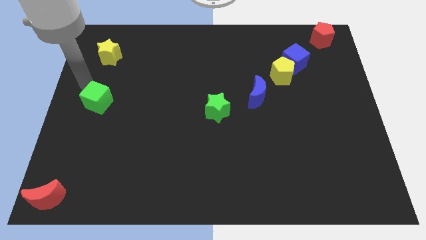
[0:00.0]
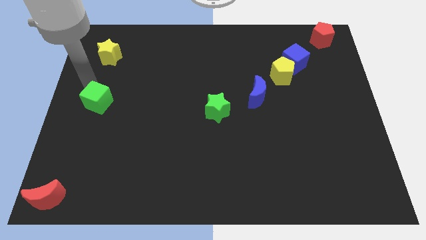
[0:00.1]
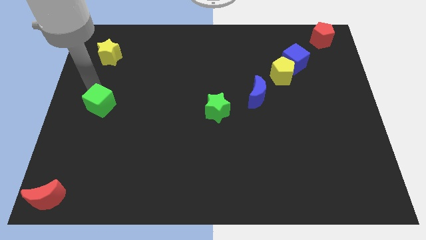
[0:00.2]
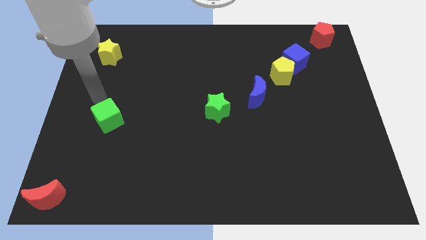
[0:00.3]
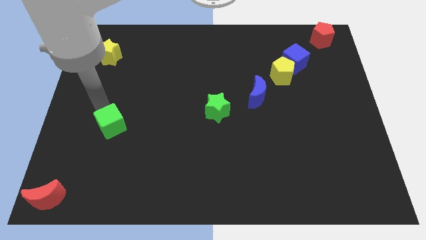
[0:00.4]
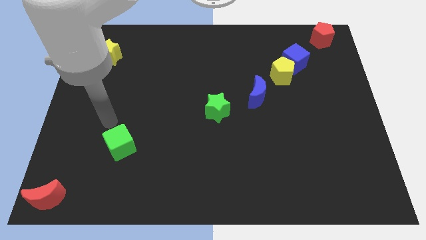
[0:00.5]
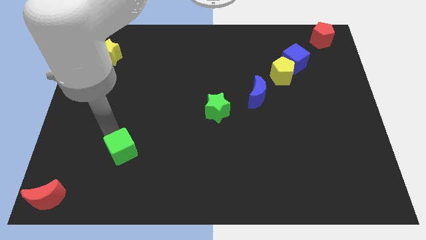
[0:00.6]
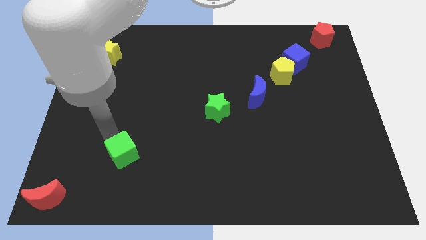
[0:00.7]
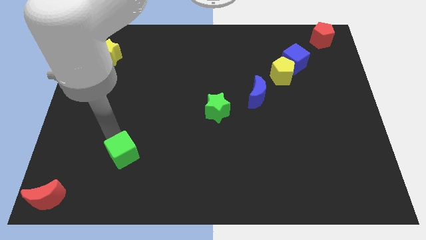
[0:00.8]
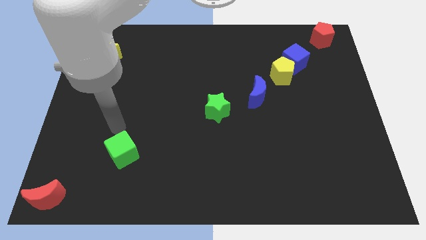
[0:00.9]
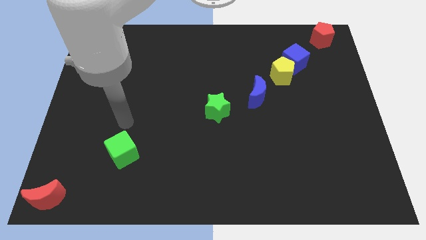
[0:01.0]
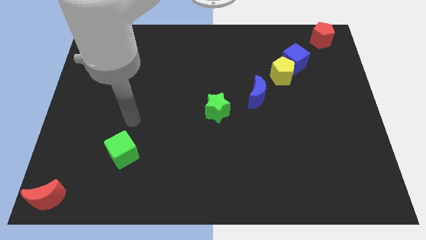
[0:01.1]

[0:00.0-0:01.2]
place the green cube diagonally in between the red crescent and the green star

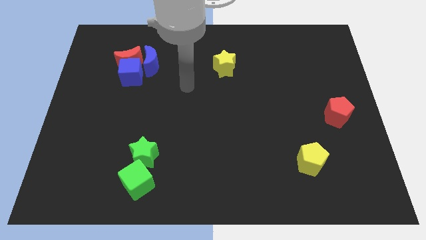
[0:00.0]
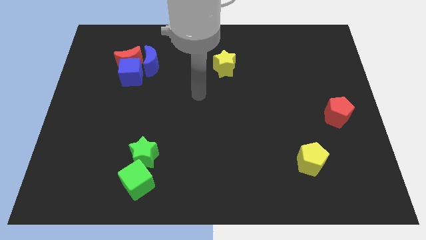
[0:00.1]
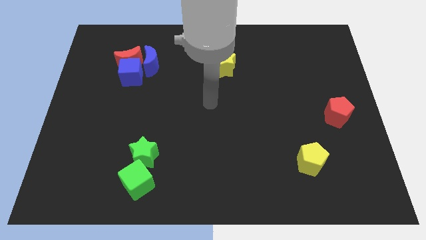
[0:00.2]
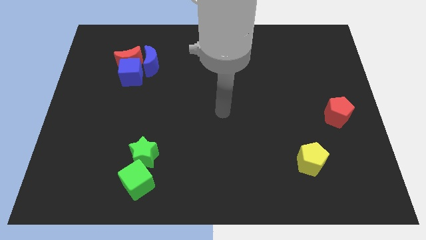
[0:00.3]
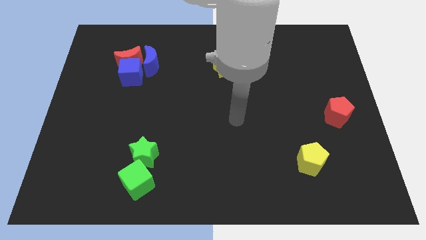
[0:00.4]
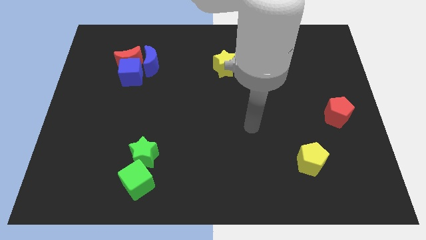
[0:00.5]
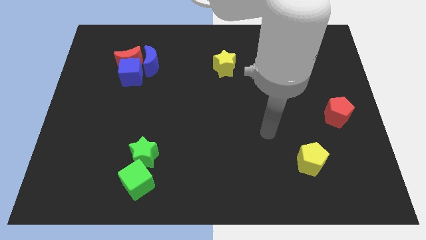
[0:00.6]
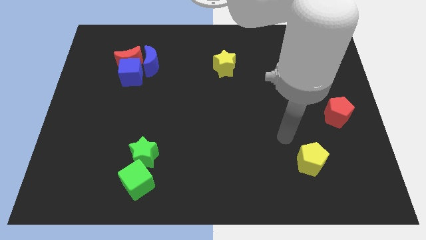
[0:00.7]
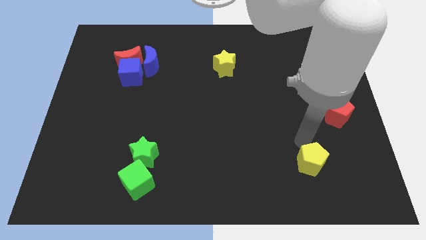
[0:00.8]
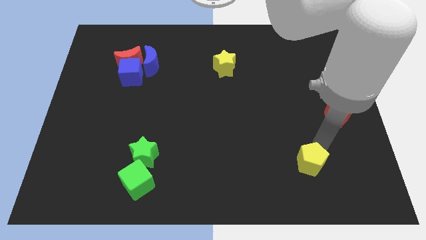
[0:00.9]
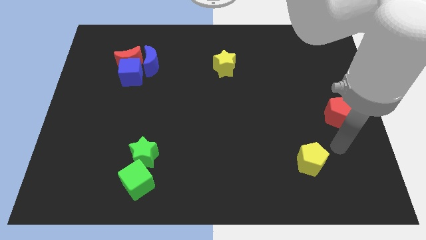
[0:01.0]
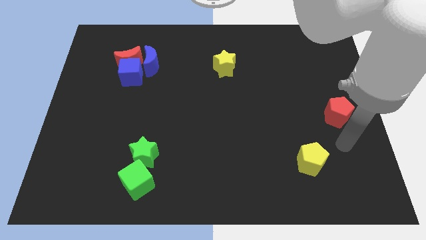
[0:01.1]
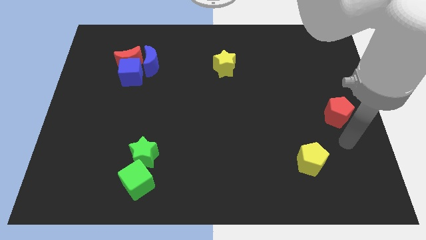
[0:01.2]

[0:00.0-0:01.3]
move your arm to the bottom of red pentagon

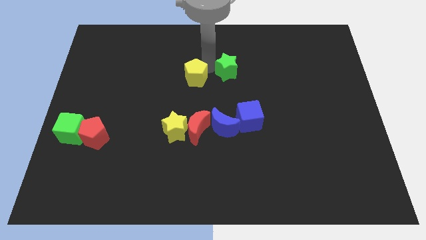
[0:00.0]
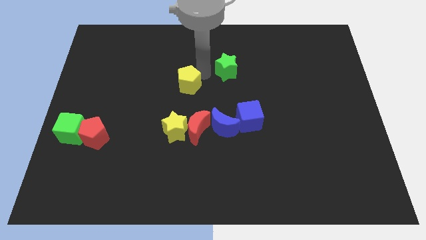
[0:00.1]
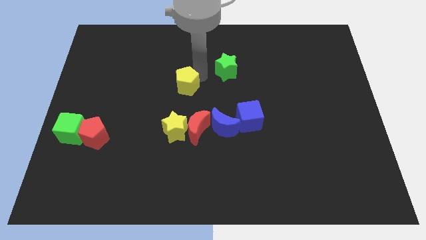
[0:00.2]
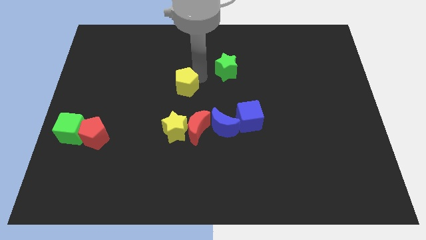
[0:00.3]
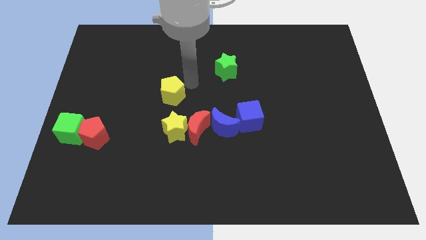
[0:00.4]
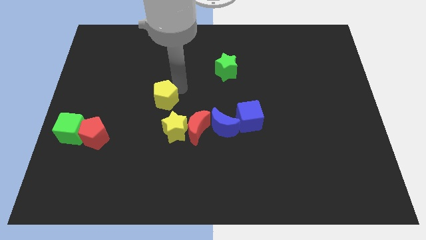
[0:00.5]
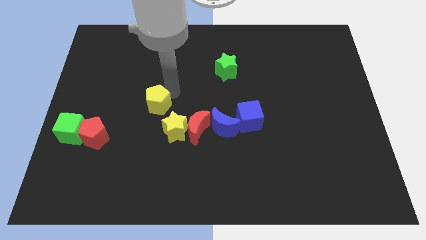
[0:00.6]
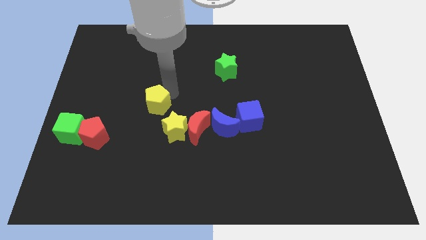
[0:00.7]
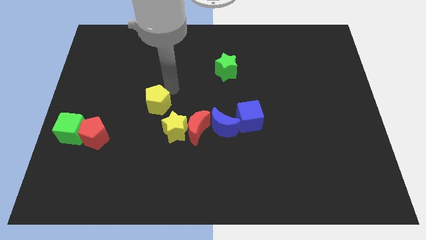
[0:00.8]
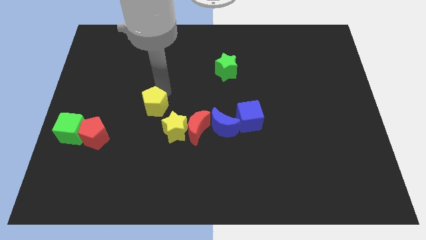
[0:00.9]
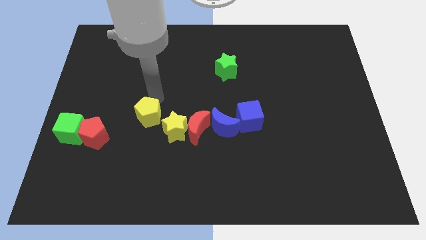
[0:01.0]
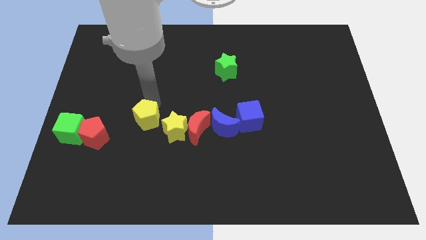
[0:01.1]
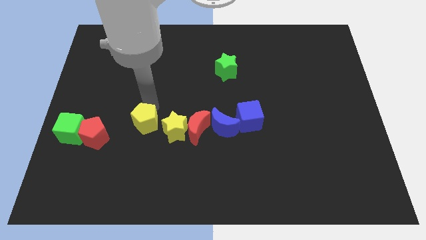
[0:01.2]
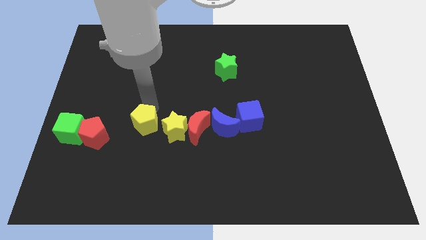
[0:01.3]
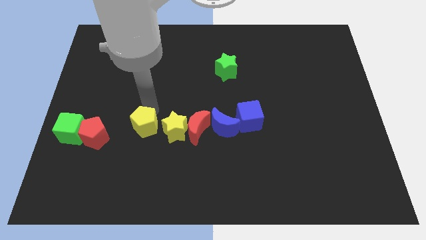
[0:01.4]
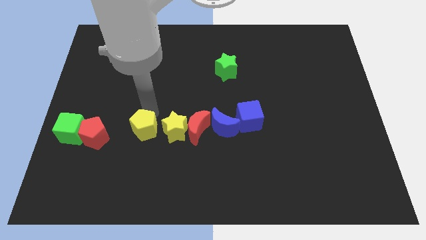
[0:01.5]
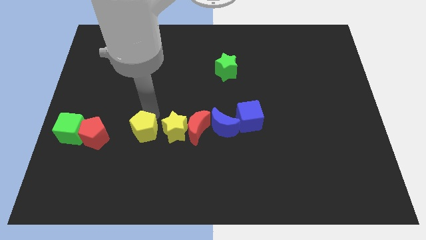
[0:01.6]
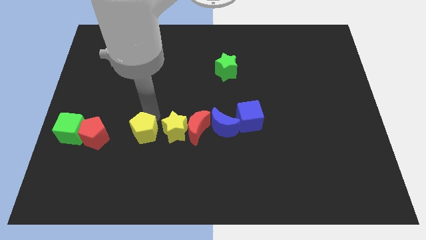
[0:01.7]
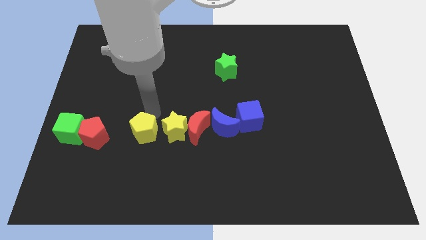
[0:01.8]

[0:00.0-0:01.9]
push the yellow pentagon to the left to the yellow star

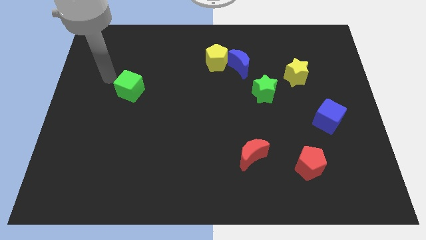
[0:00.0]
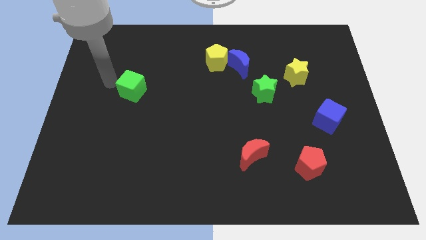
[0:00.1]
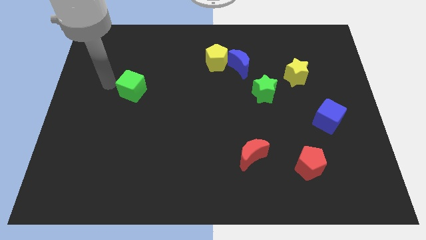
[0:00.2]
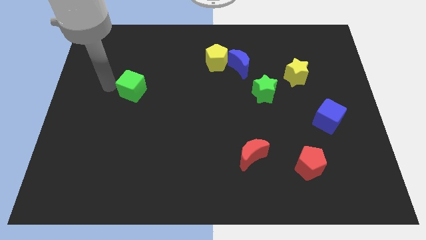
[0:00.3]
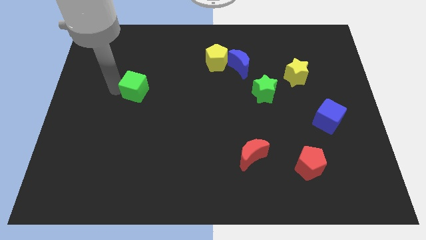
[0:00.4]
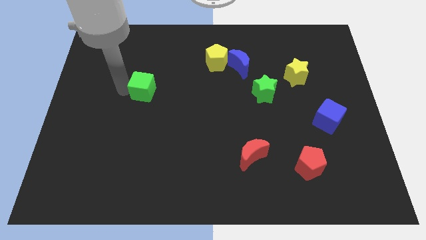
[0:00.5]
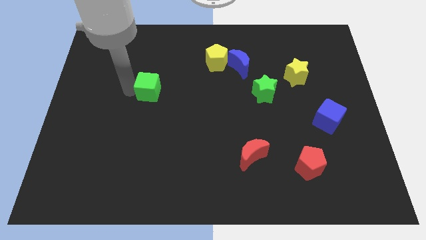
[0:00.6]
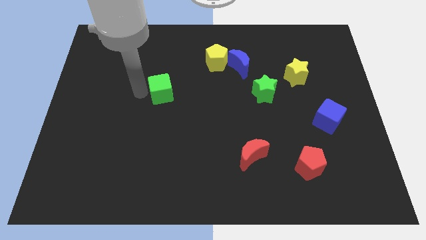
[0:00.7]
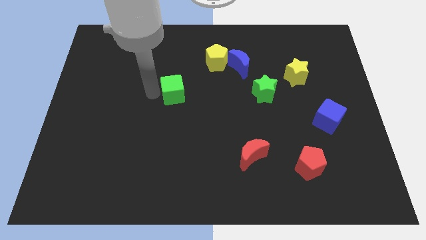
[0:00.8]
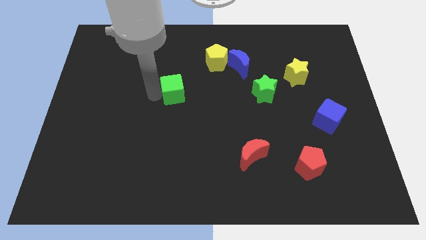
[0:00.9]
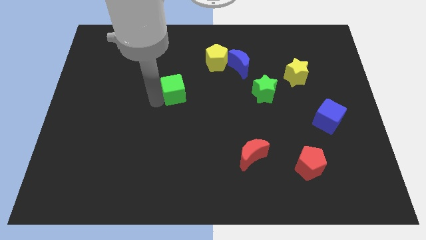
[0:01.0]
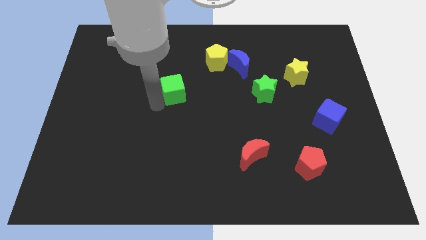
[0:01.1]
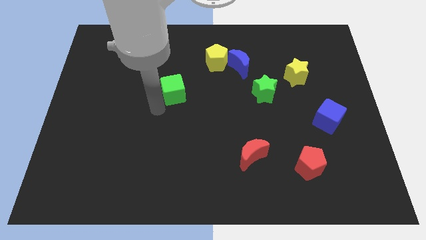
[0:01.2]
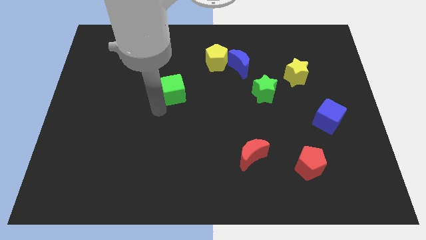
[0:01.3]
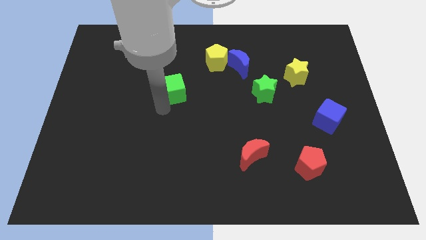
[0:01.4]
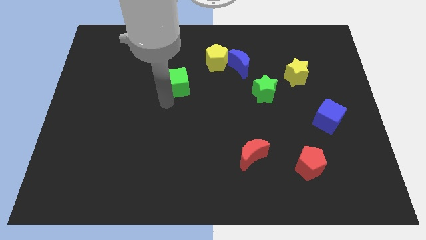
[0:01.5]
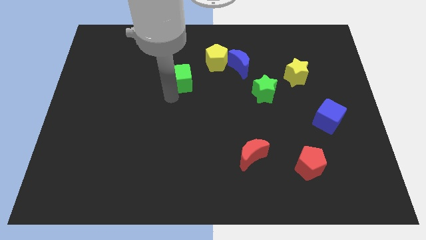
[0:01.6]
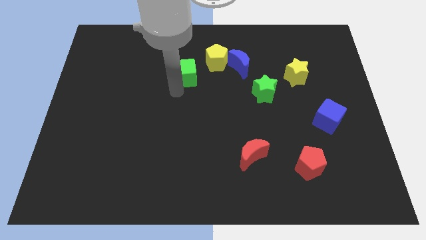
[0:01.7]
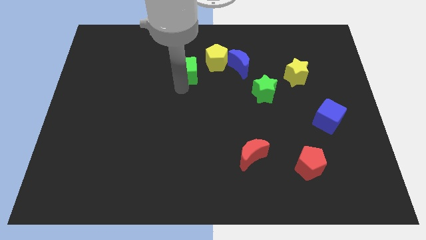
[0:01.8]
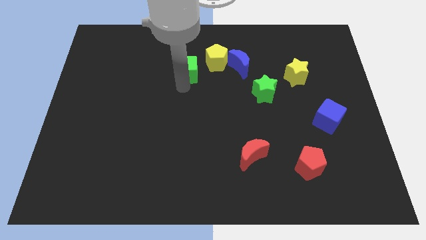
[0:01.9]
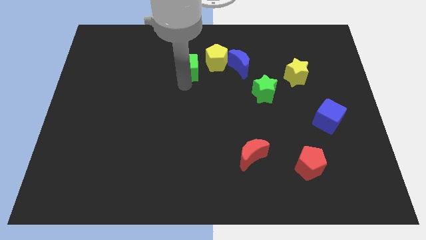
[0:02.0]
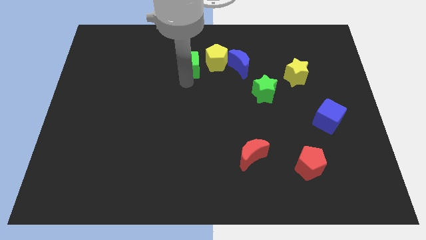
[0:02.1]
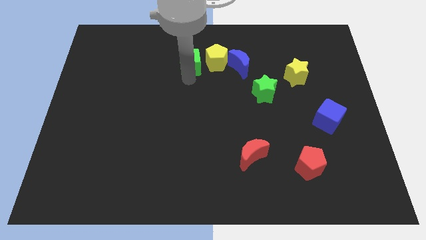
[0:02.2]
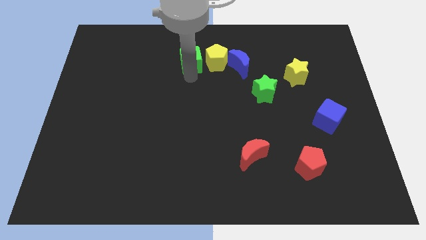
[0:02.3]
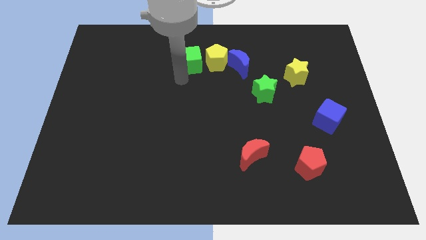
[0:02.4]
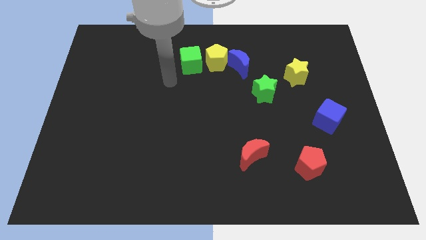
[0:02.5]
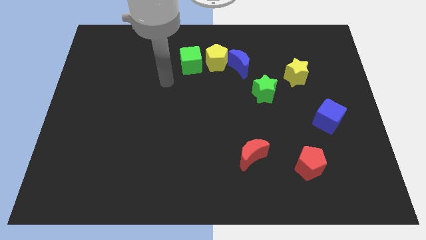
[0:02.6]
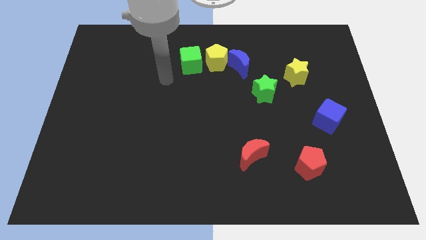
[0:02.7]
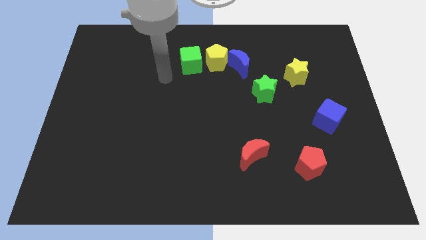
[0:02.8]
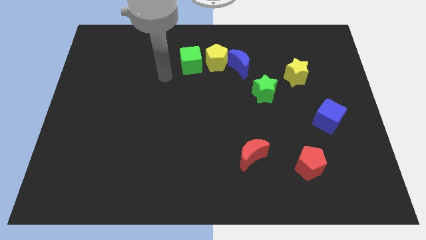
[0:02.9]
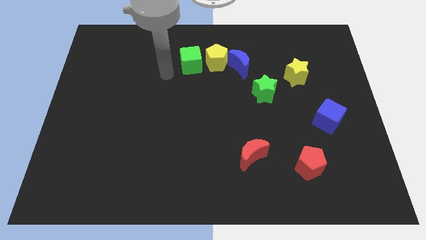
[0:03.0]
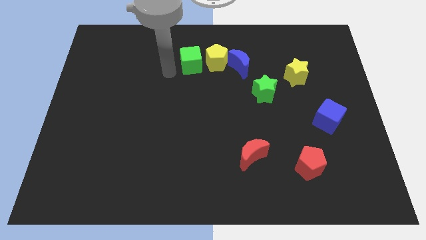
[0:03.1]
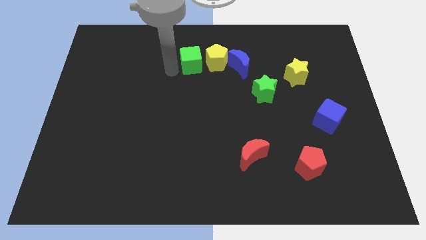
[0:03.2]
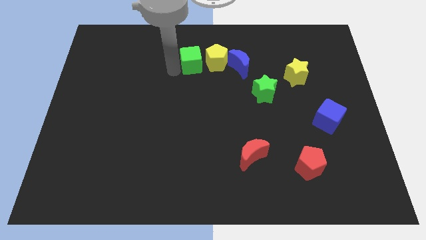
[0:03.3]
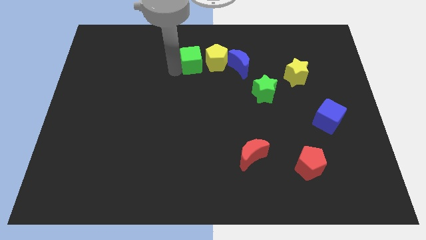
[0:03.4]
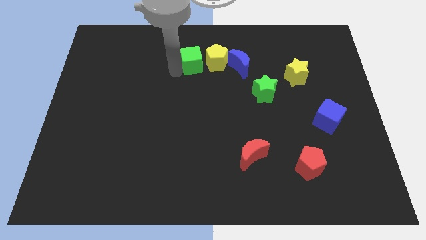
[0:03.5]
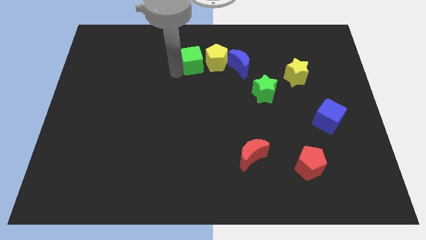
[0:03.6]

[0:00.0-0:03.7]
place the green cube to the left of the yellow pentagon

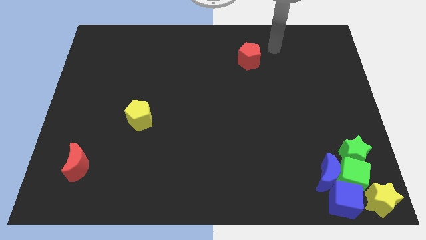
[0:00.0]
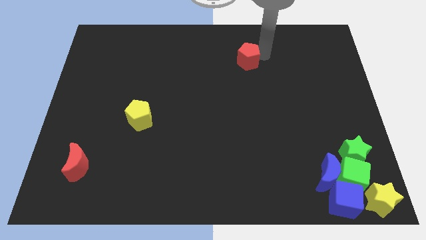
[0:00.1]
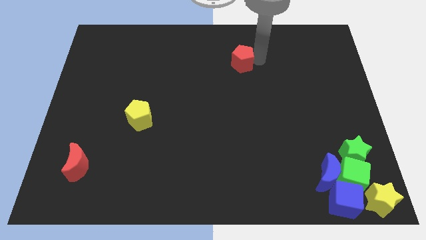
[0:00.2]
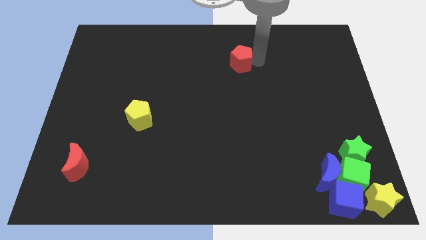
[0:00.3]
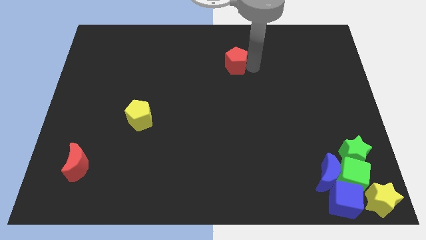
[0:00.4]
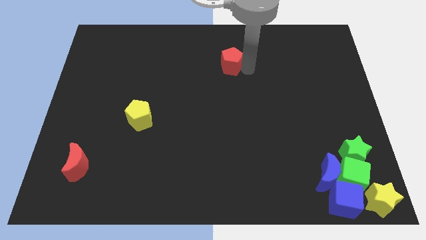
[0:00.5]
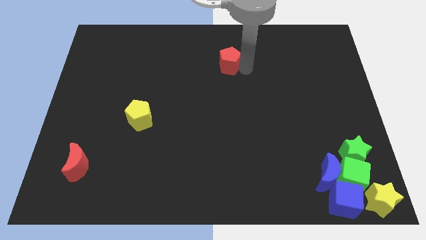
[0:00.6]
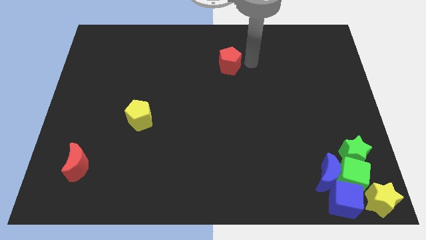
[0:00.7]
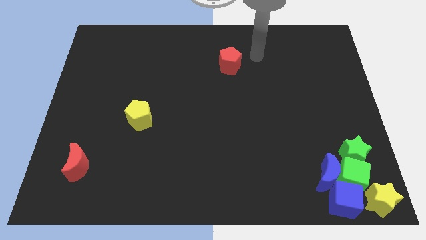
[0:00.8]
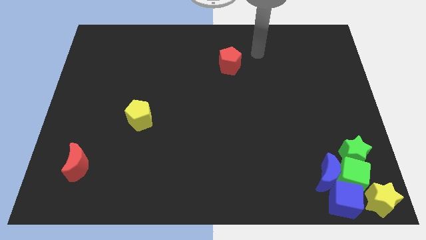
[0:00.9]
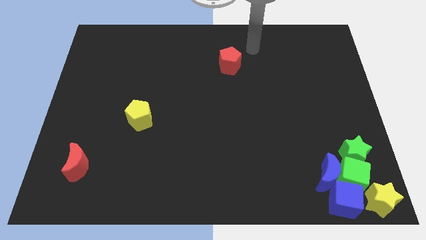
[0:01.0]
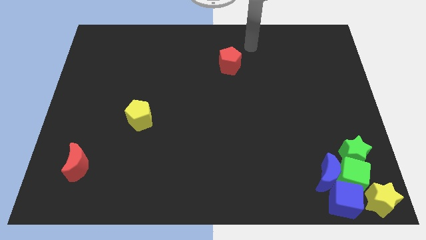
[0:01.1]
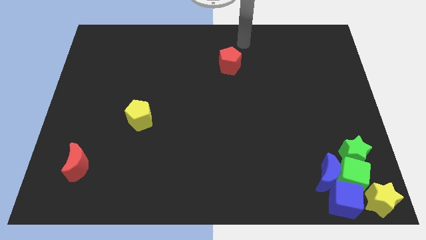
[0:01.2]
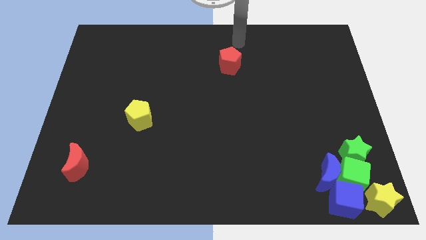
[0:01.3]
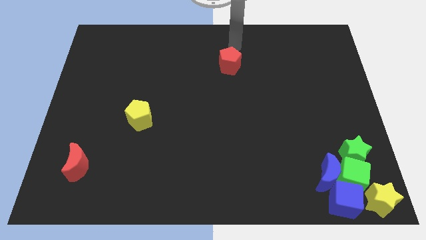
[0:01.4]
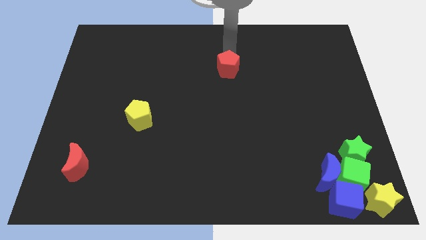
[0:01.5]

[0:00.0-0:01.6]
place the red pentagon to the top center
